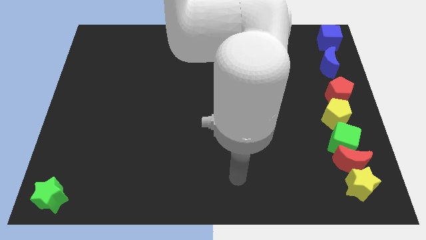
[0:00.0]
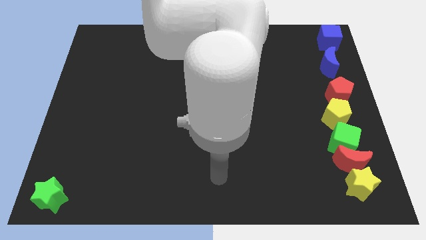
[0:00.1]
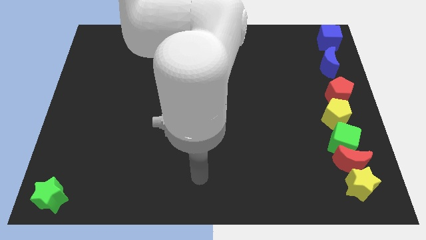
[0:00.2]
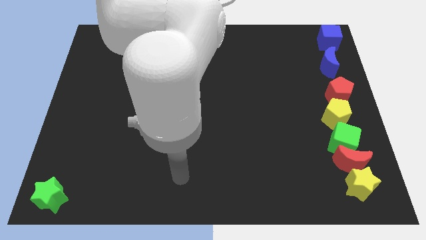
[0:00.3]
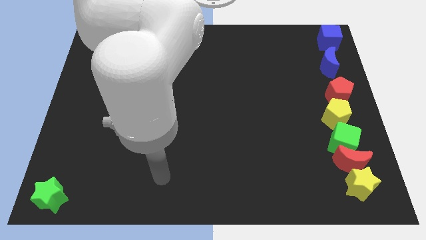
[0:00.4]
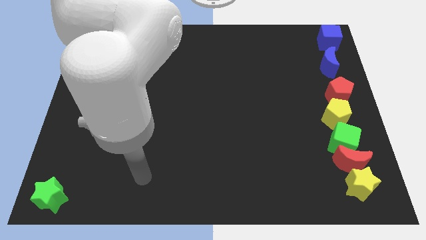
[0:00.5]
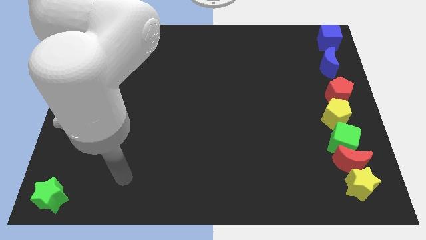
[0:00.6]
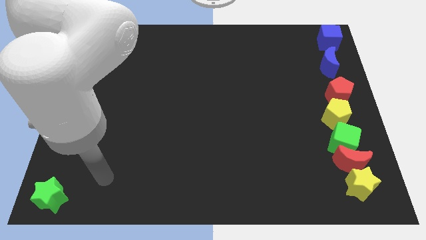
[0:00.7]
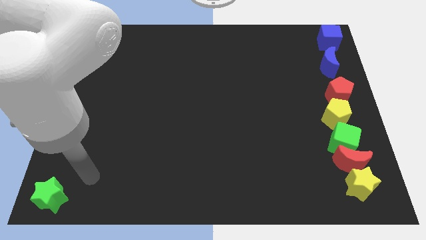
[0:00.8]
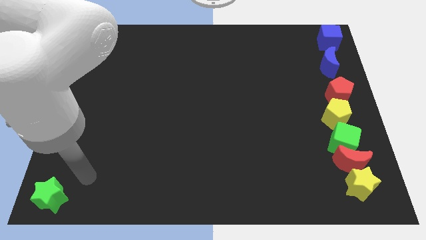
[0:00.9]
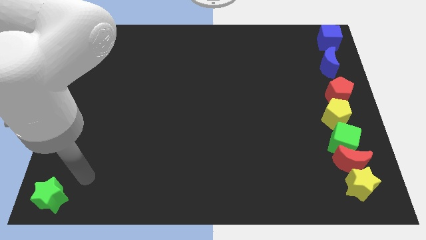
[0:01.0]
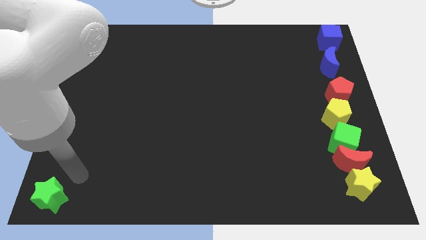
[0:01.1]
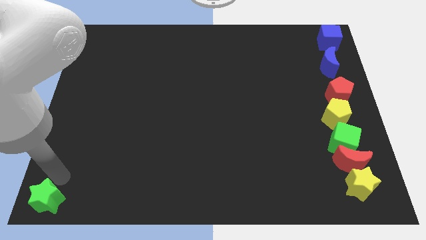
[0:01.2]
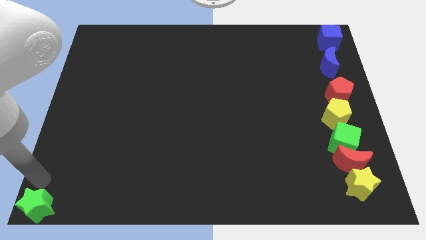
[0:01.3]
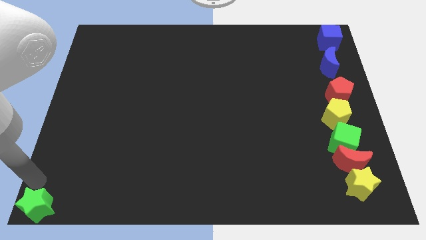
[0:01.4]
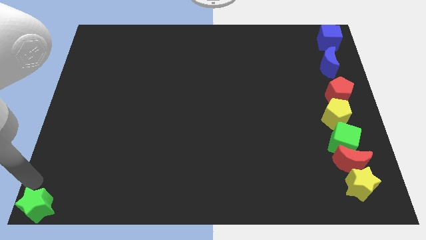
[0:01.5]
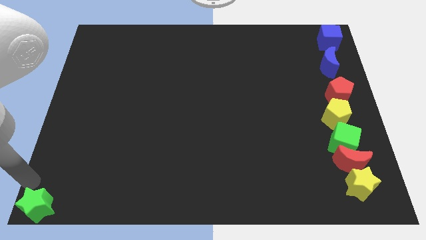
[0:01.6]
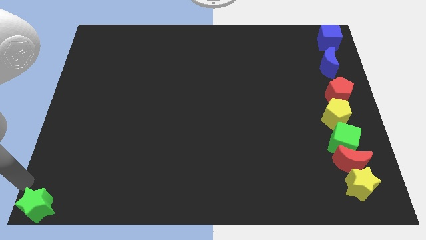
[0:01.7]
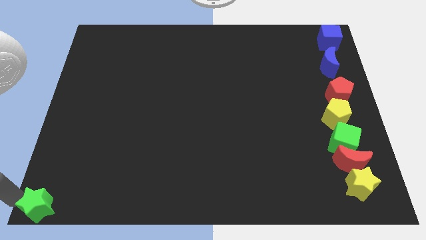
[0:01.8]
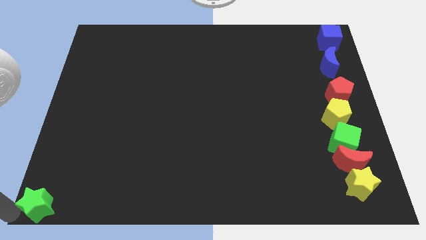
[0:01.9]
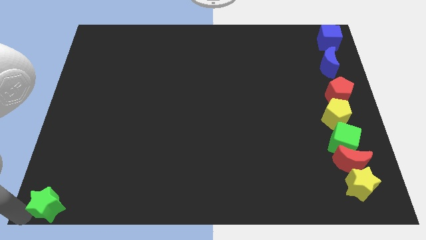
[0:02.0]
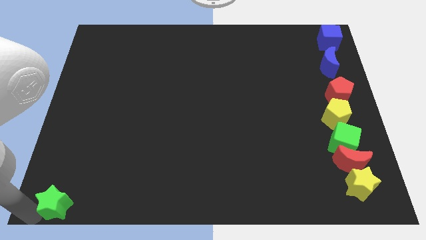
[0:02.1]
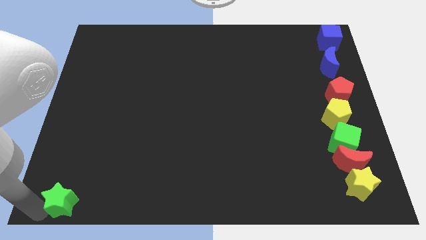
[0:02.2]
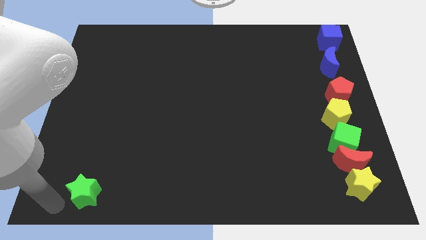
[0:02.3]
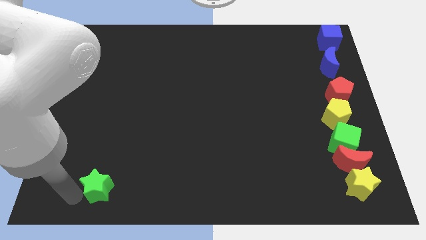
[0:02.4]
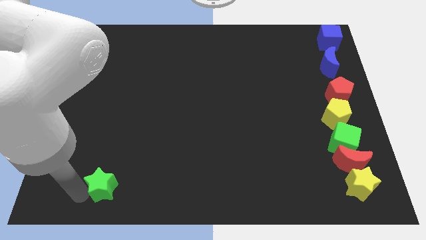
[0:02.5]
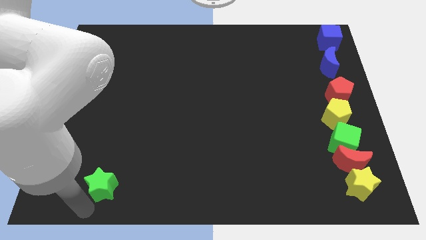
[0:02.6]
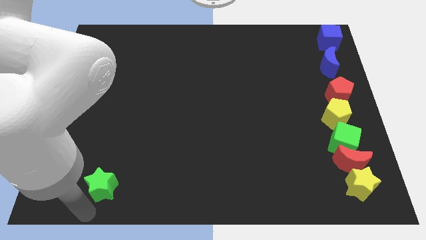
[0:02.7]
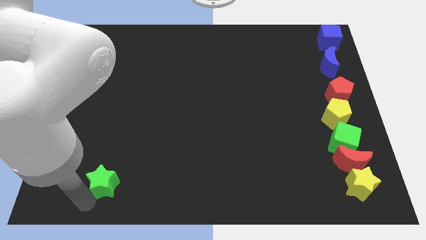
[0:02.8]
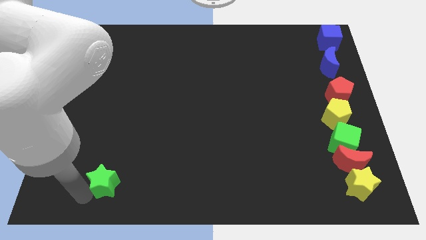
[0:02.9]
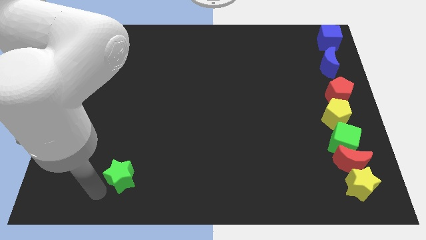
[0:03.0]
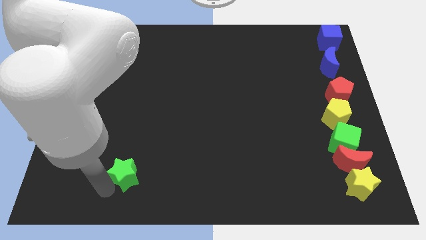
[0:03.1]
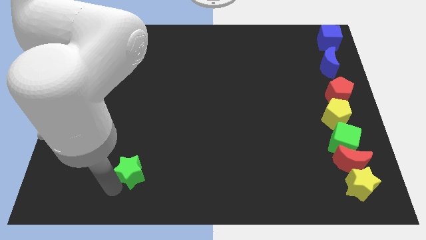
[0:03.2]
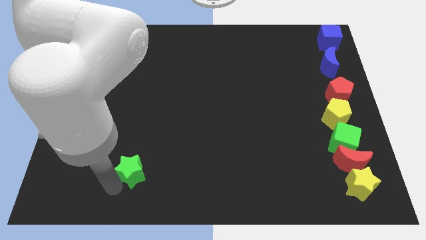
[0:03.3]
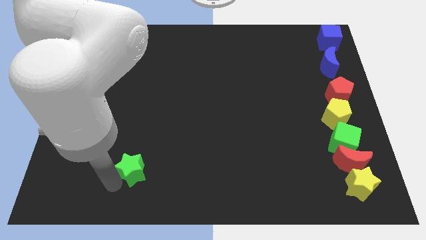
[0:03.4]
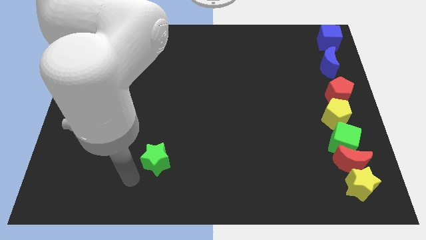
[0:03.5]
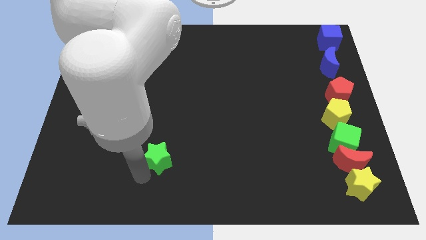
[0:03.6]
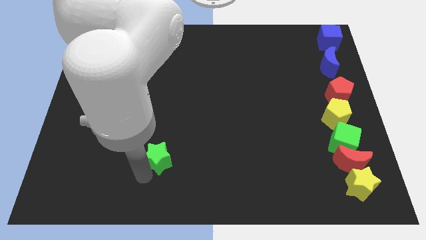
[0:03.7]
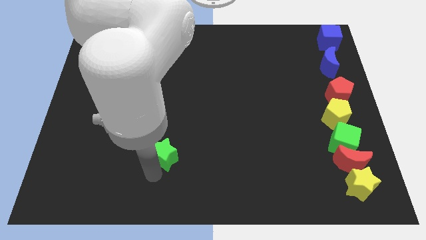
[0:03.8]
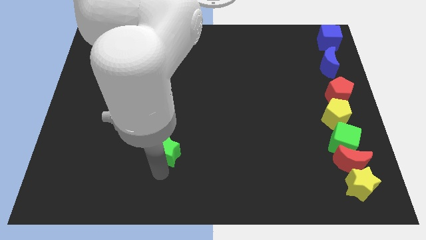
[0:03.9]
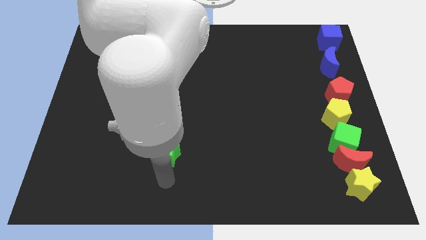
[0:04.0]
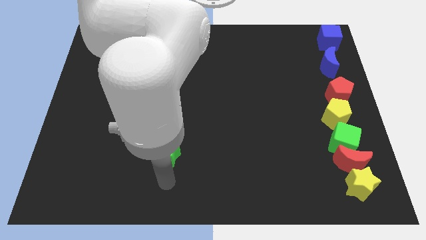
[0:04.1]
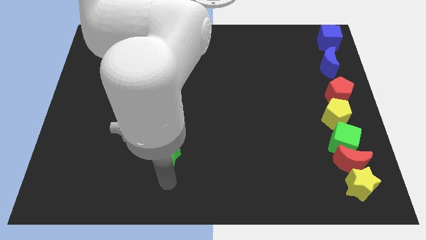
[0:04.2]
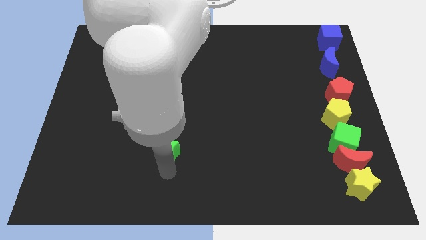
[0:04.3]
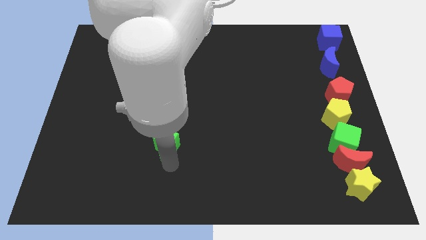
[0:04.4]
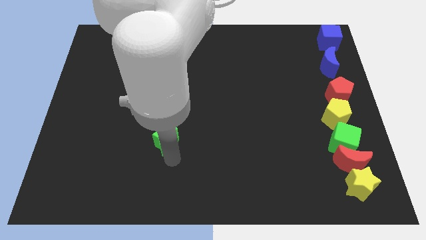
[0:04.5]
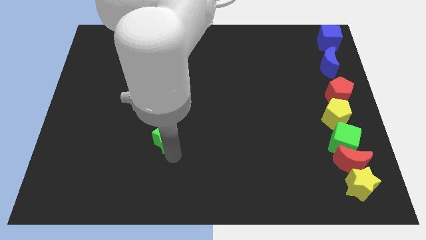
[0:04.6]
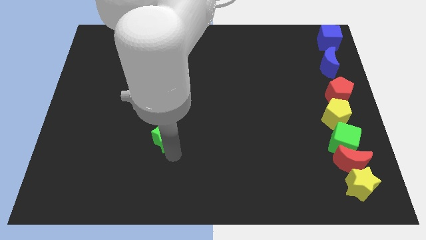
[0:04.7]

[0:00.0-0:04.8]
place the green star to the left of the green cube

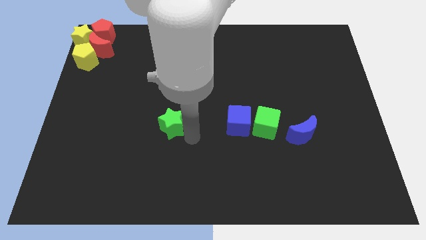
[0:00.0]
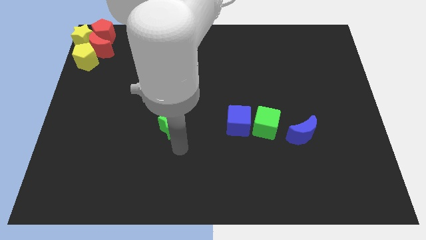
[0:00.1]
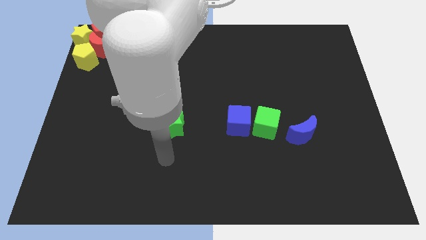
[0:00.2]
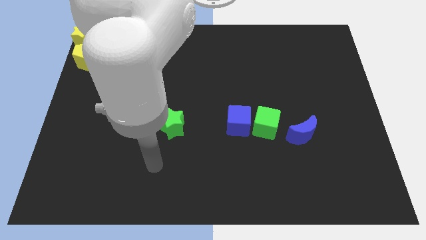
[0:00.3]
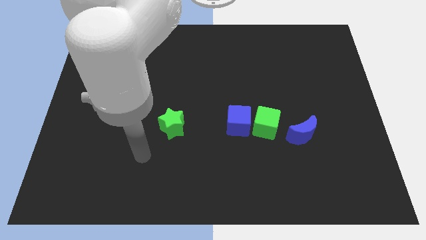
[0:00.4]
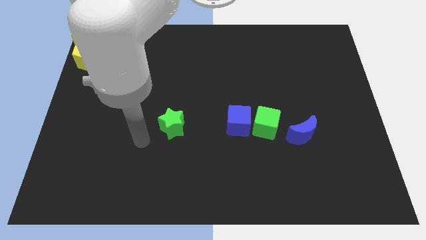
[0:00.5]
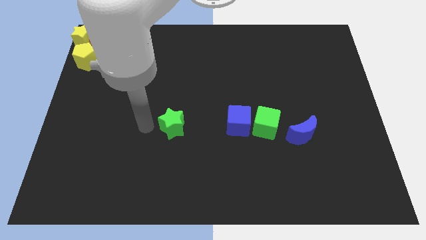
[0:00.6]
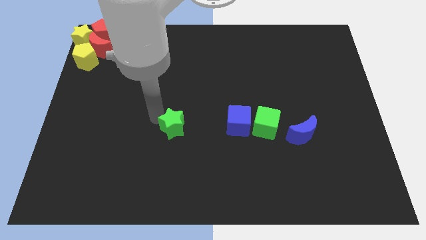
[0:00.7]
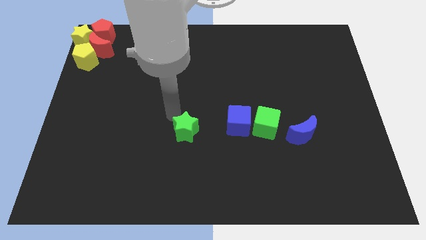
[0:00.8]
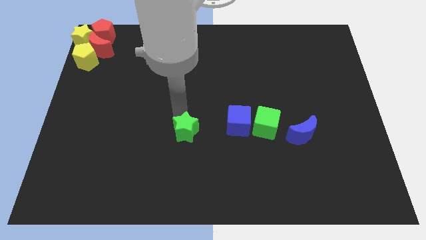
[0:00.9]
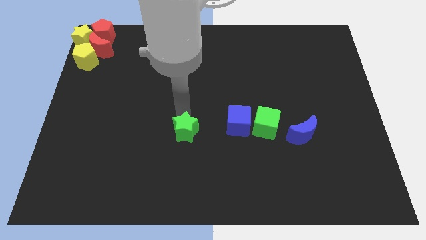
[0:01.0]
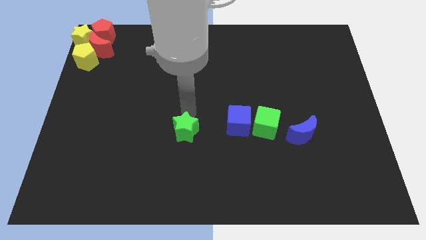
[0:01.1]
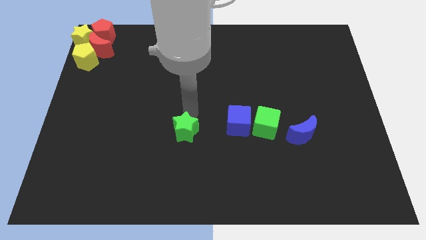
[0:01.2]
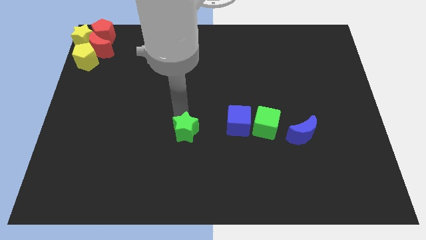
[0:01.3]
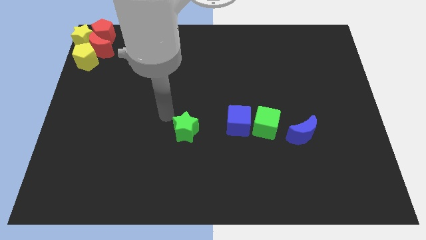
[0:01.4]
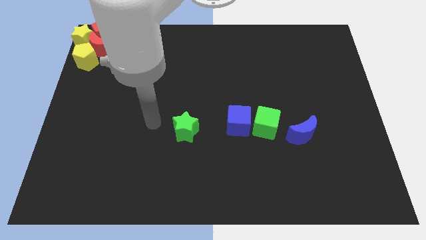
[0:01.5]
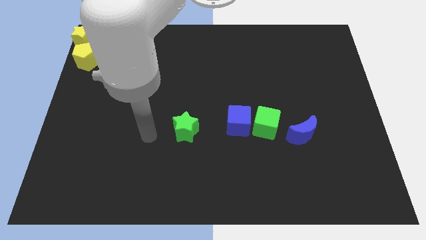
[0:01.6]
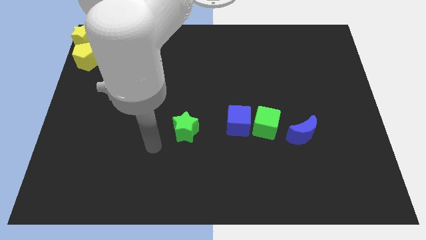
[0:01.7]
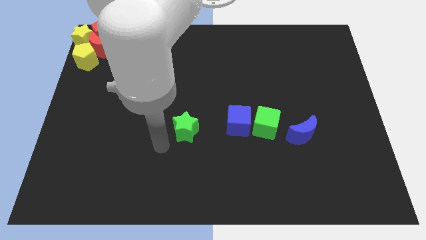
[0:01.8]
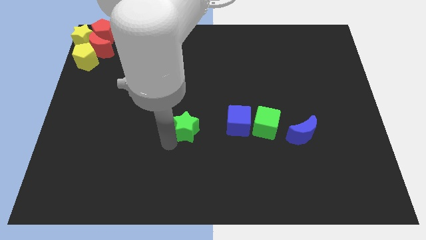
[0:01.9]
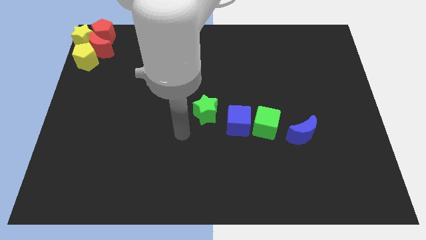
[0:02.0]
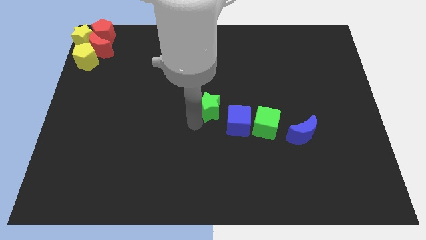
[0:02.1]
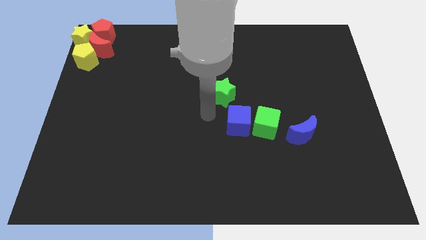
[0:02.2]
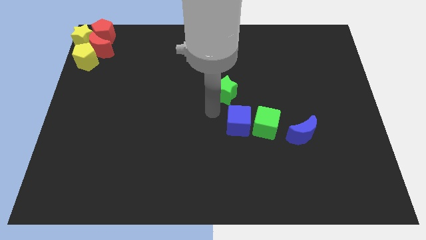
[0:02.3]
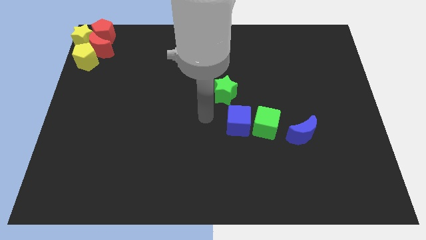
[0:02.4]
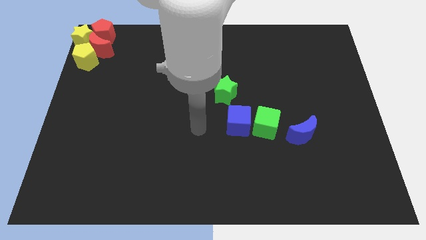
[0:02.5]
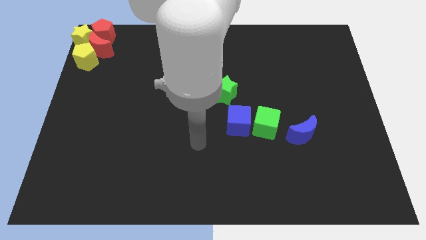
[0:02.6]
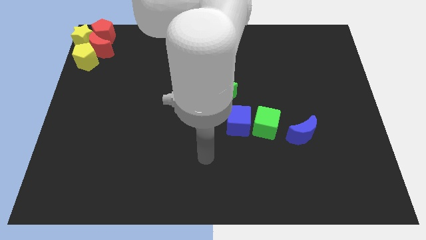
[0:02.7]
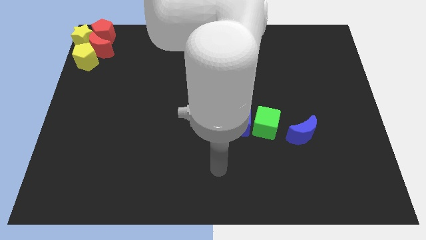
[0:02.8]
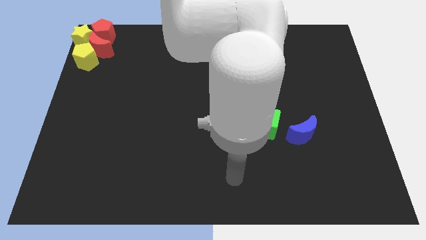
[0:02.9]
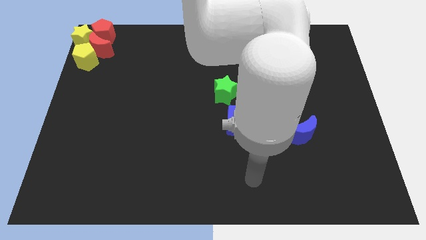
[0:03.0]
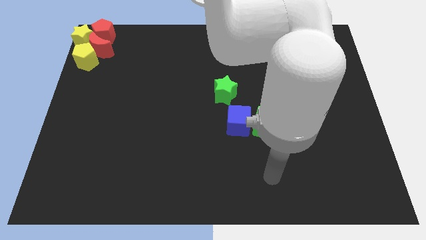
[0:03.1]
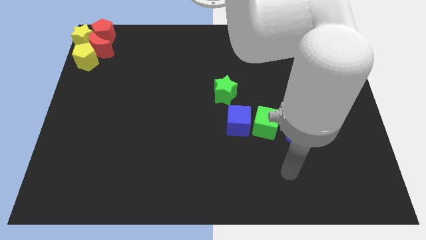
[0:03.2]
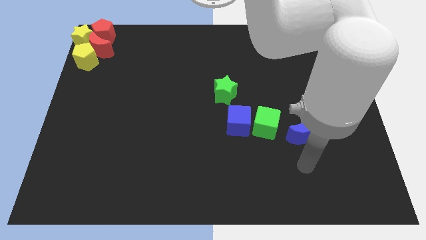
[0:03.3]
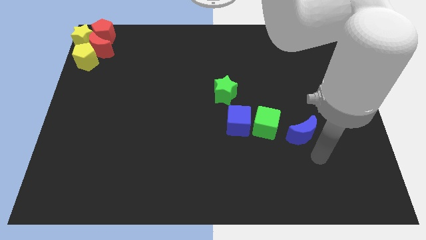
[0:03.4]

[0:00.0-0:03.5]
place the green star at the top left side of the blue cube

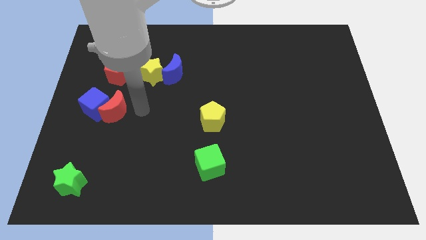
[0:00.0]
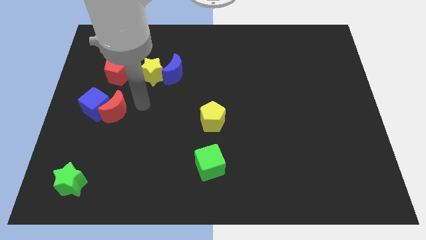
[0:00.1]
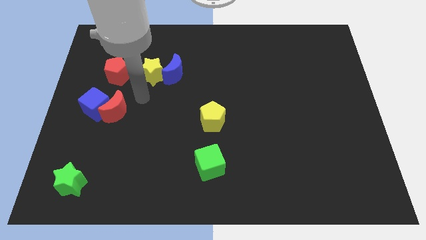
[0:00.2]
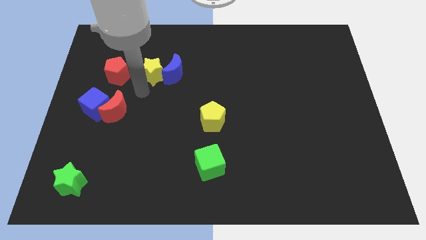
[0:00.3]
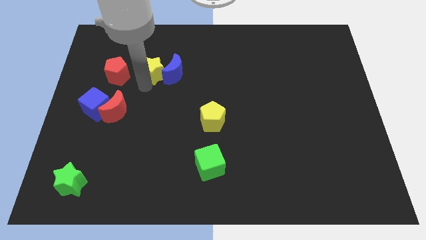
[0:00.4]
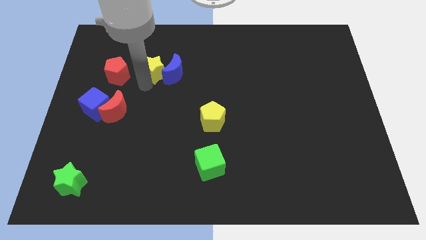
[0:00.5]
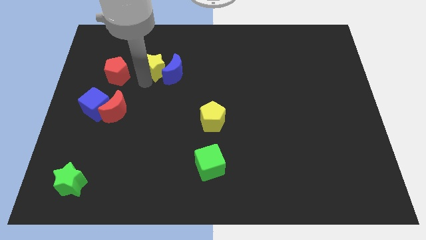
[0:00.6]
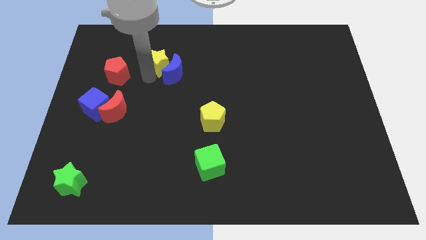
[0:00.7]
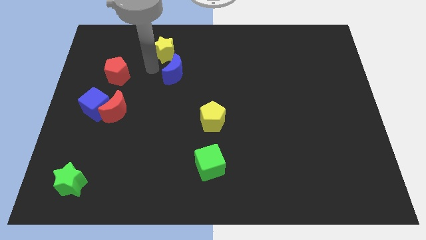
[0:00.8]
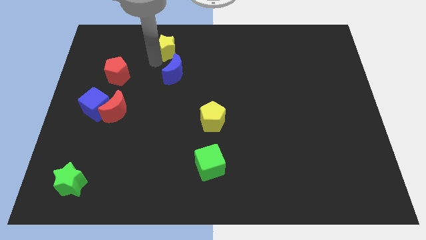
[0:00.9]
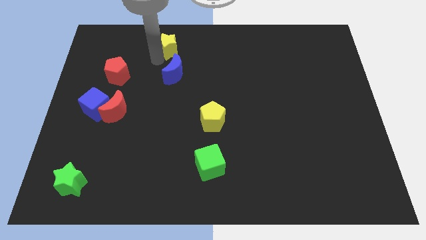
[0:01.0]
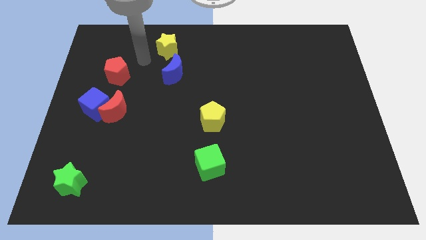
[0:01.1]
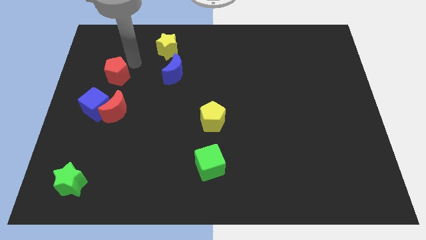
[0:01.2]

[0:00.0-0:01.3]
slide the yellow star slightly towards up
